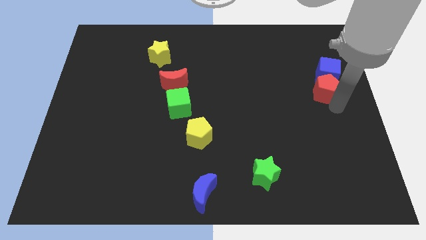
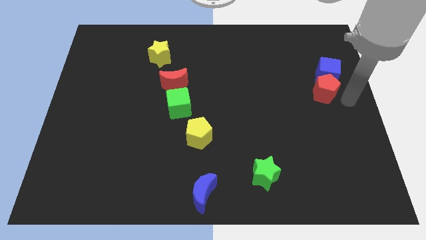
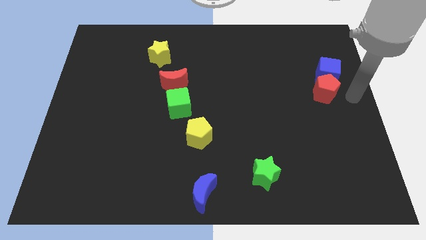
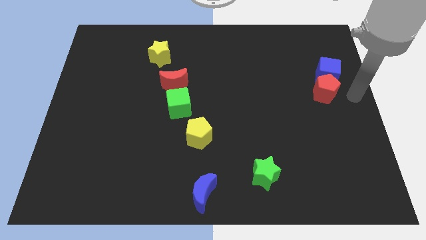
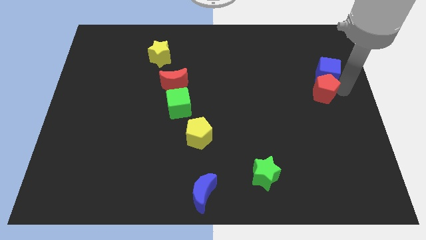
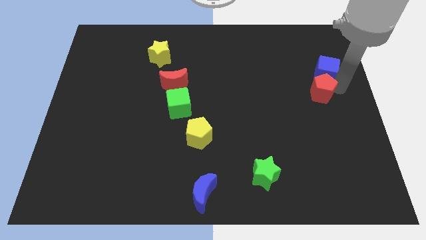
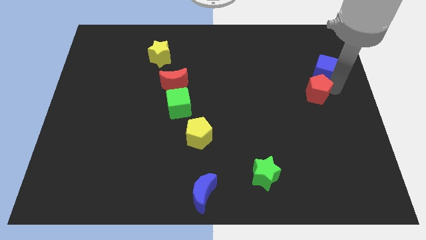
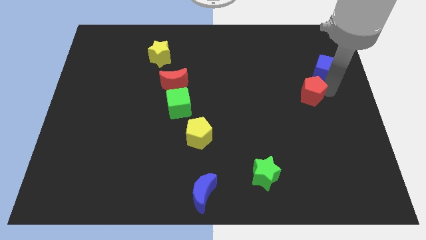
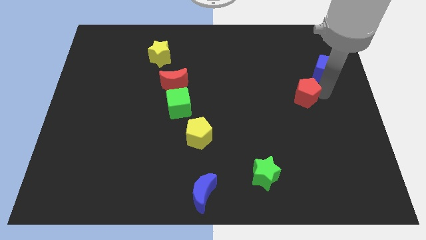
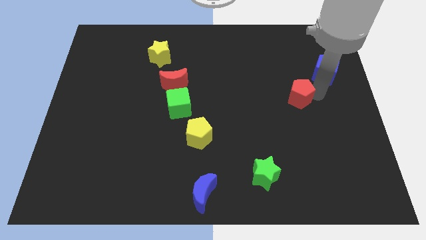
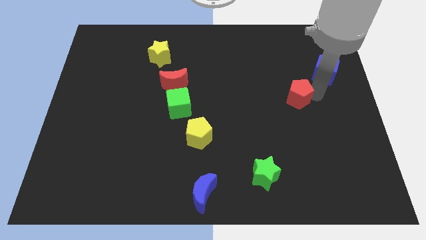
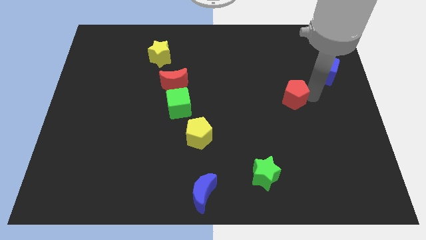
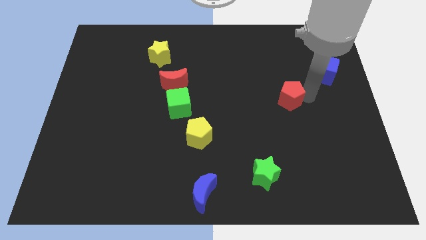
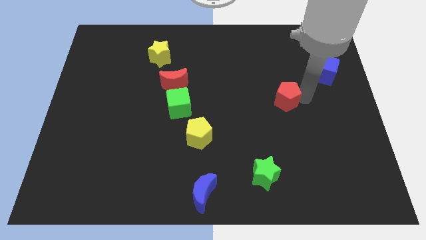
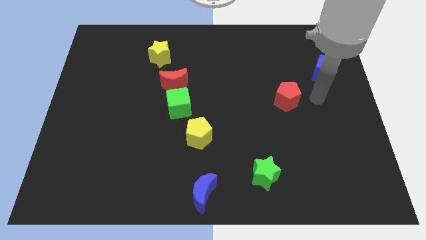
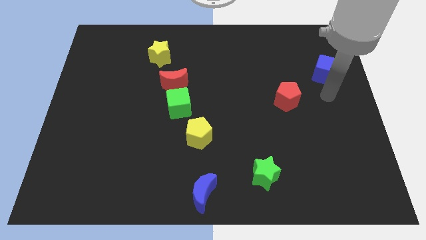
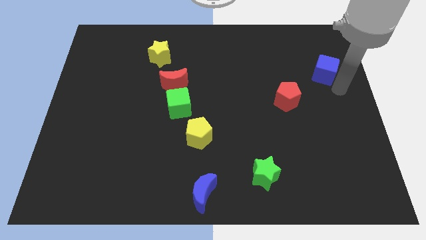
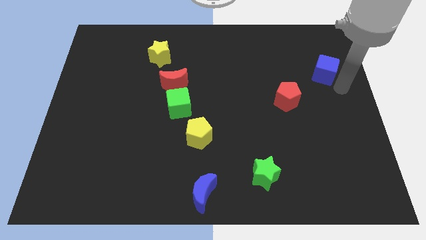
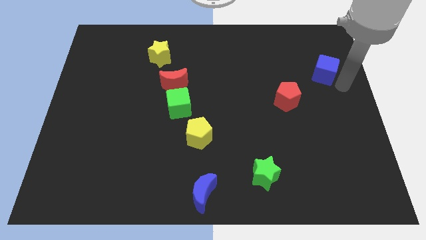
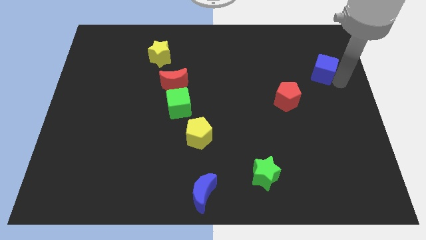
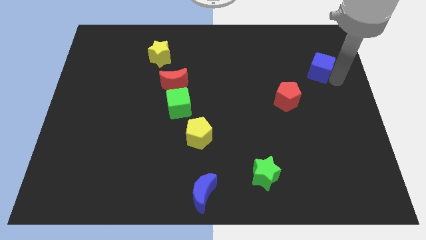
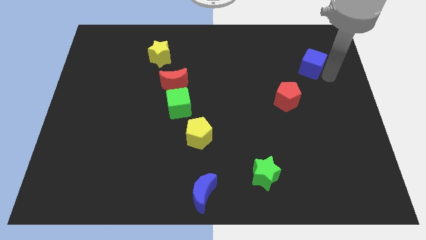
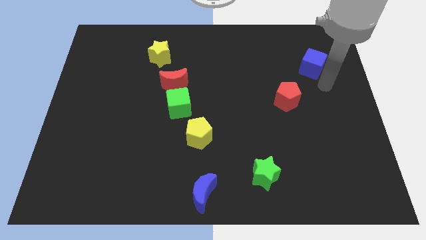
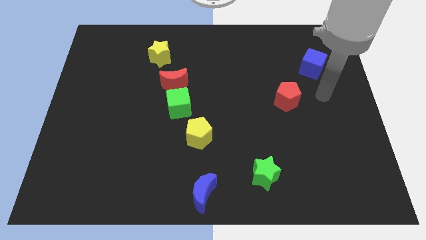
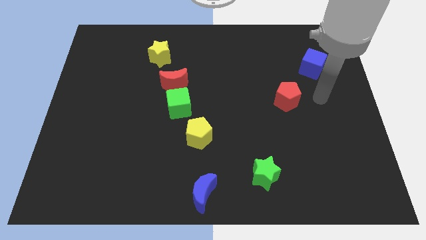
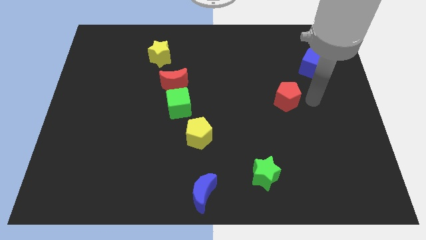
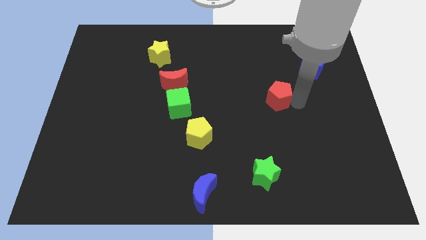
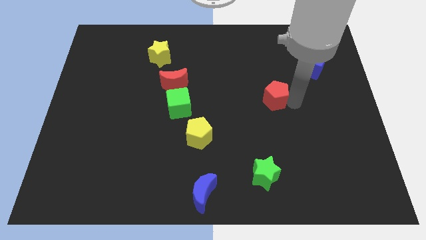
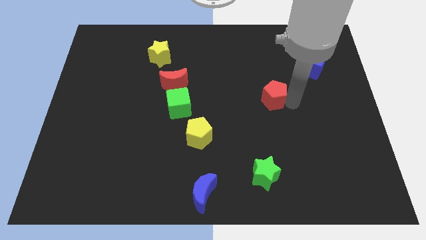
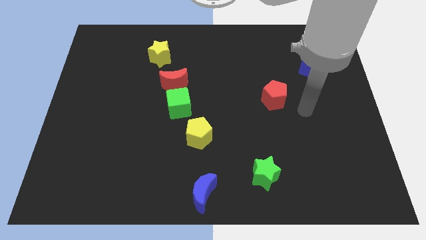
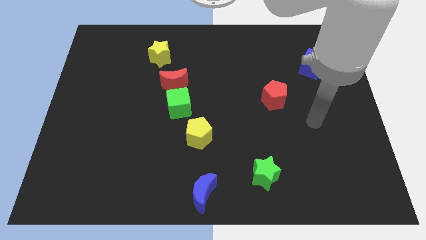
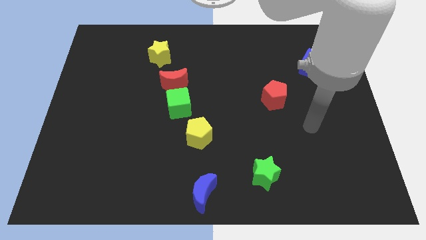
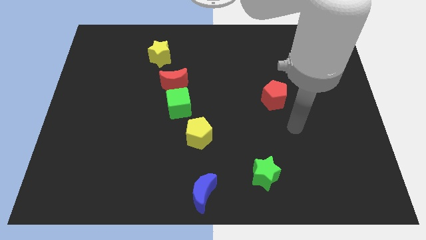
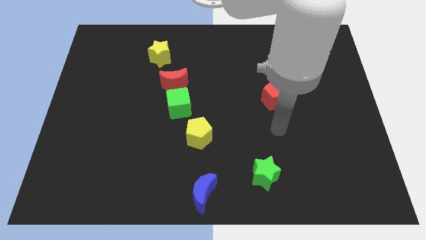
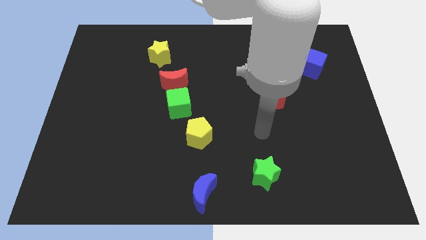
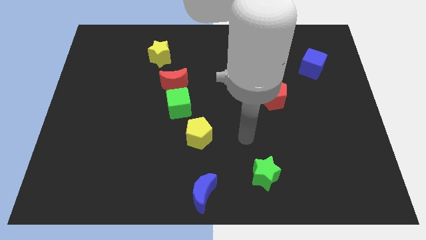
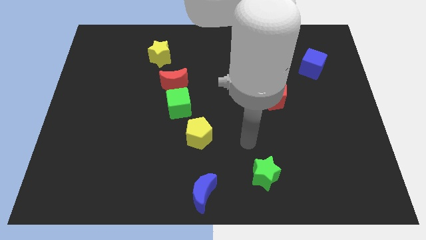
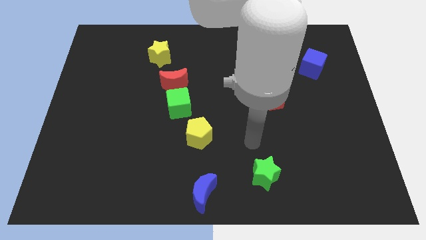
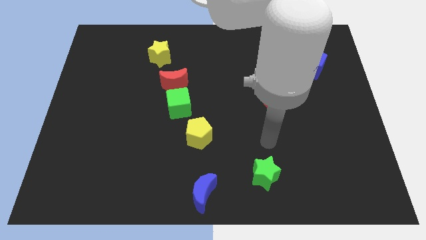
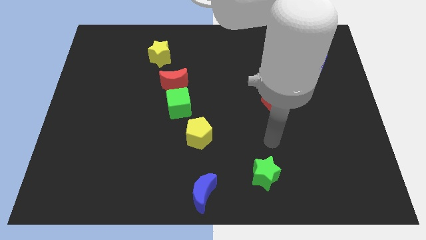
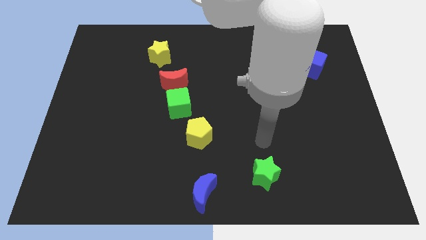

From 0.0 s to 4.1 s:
place red pentagon in between yellow pentagon and blue cube

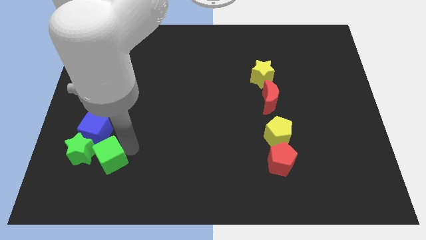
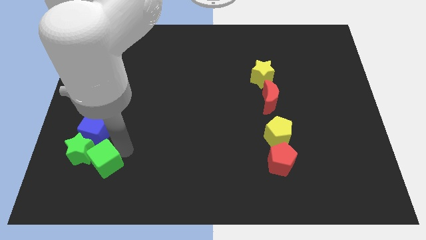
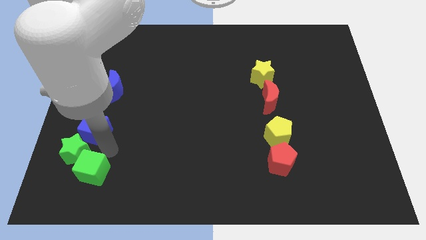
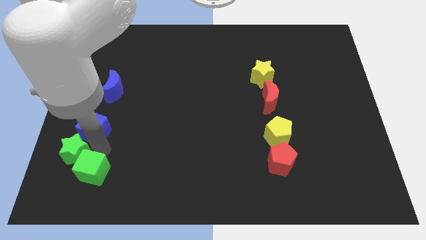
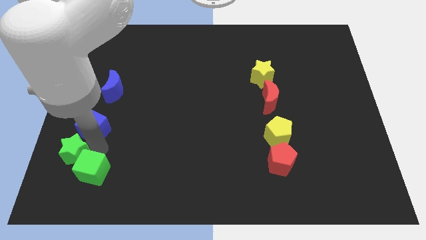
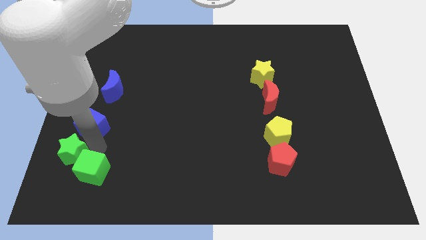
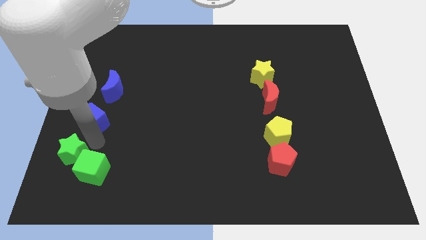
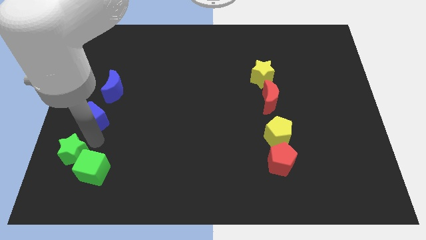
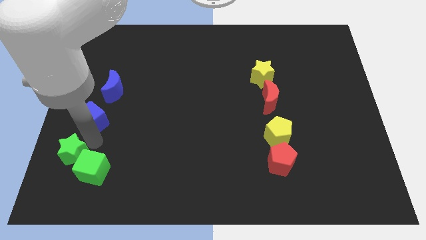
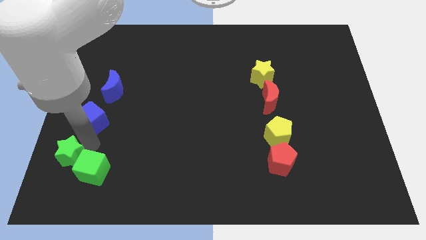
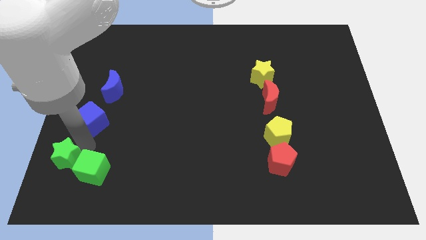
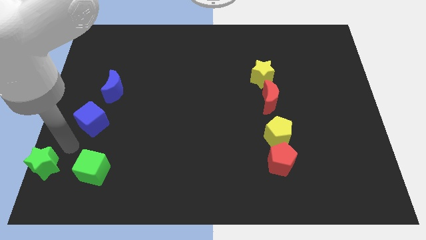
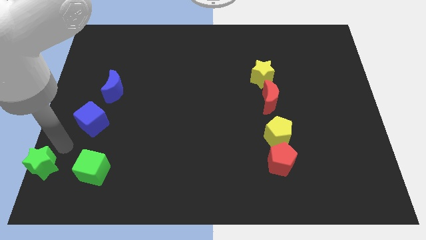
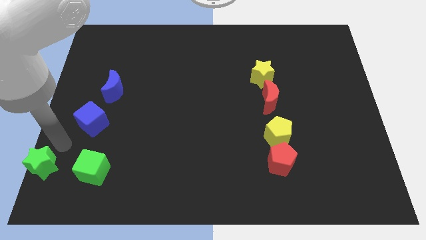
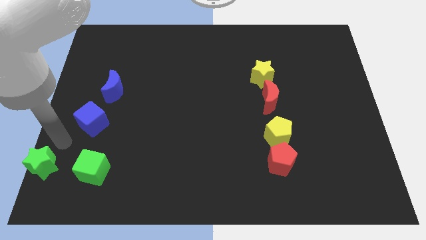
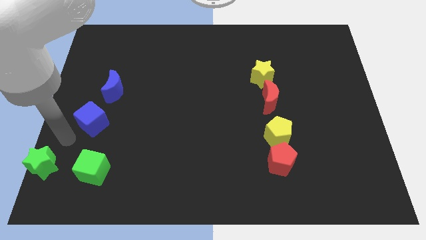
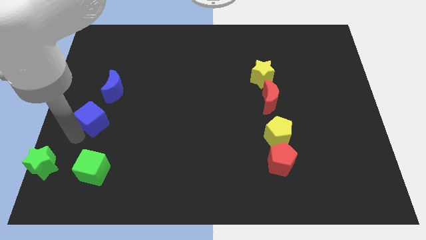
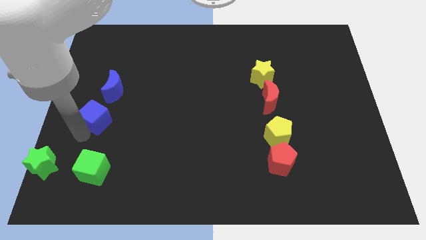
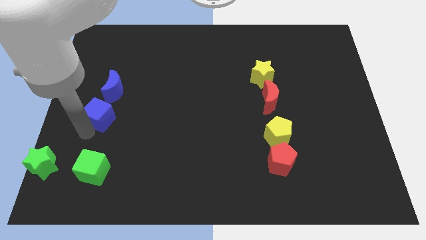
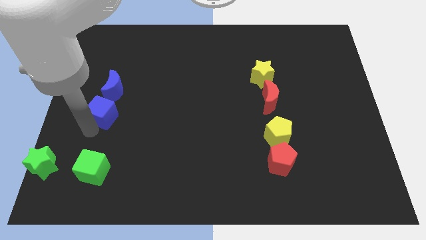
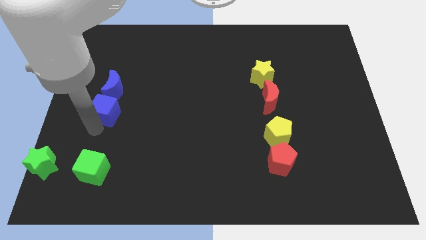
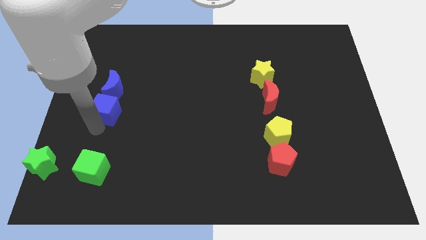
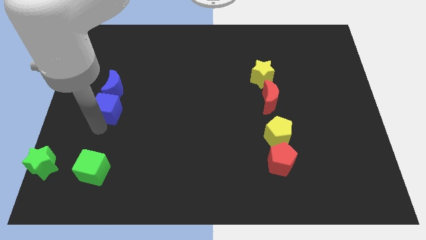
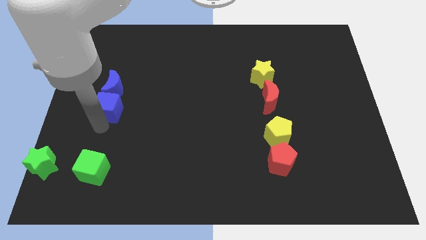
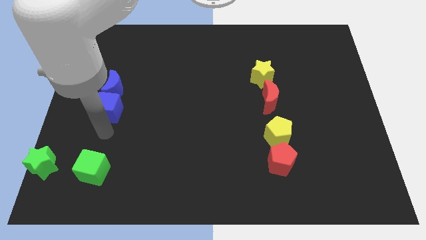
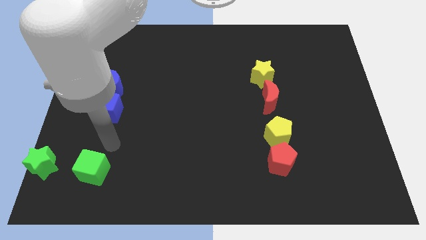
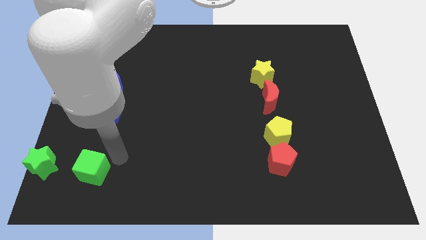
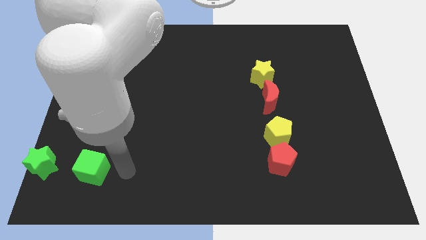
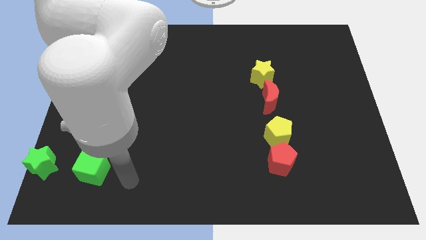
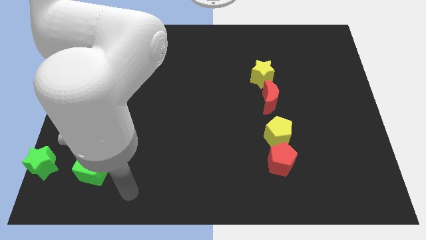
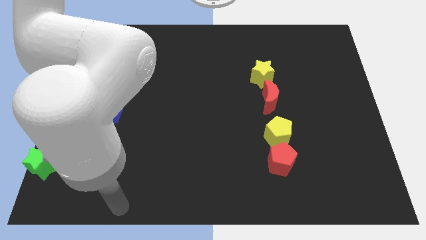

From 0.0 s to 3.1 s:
separate the green blocks and the blue blocks

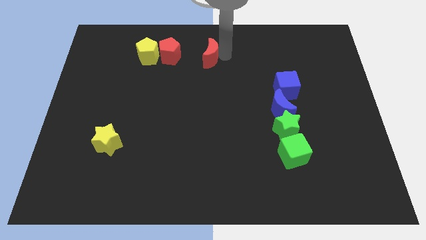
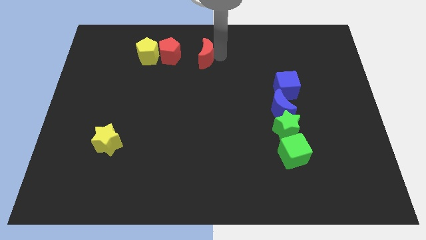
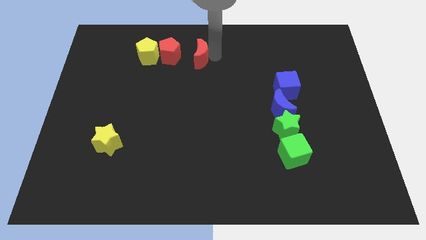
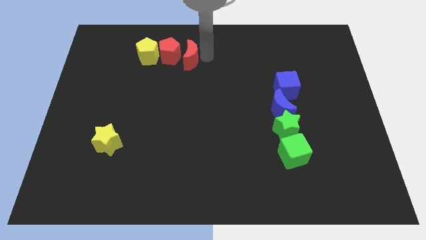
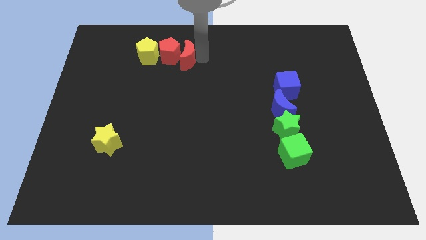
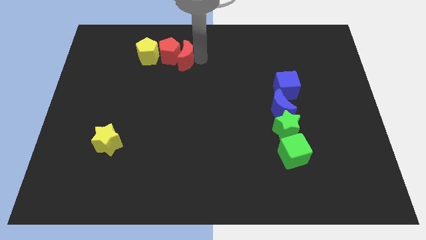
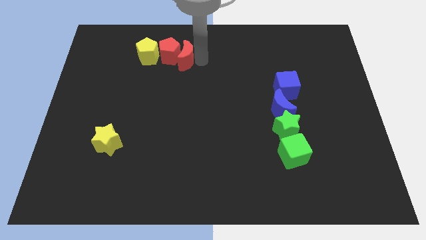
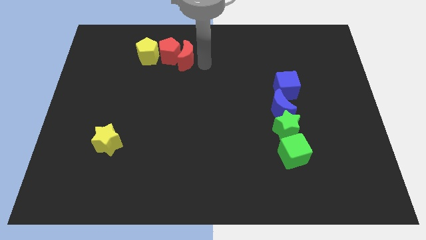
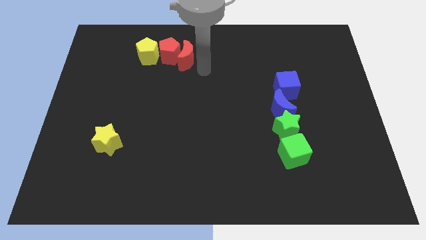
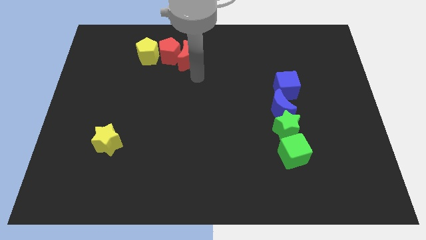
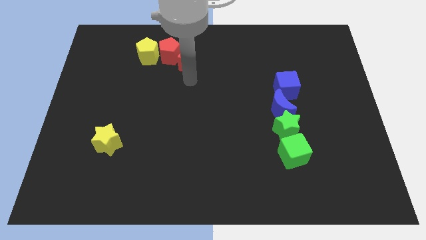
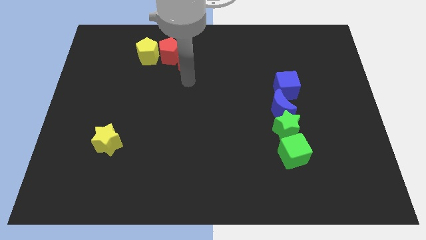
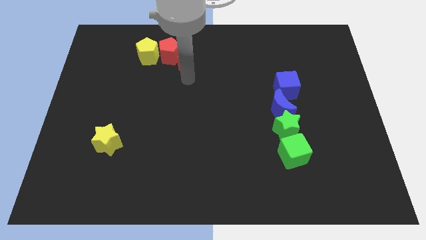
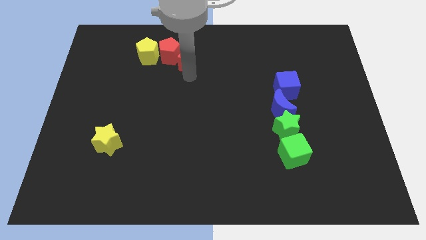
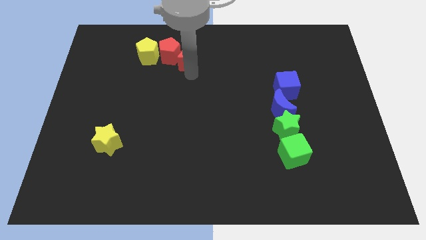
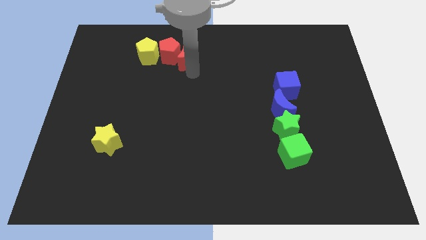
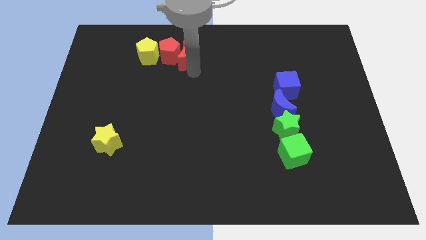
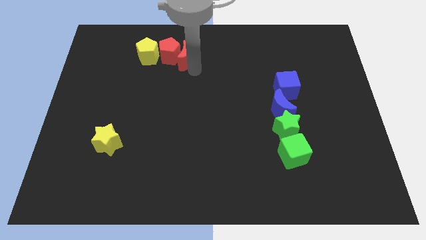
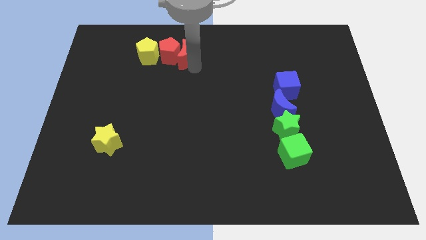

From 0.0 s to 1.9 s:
push the red crescent to the right side of the red pentagon
